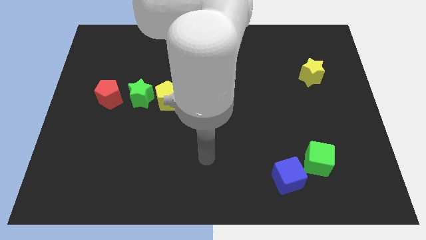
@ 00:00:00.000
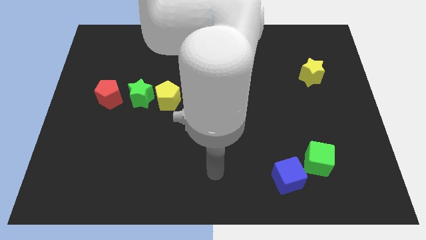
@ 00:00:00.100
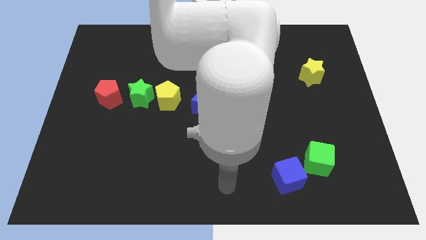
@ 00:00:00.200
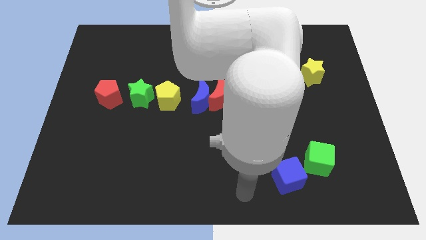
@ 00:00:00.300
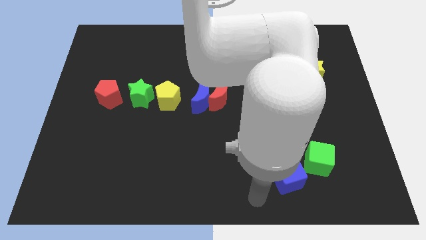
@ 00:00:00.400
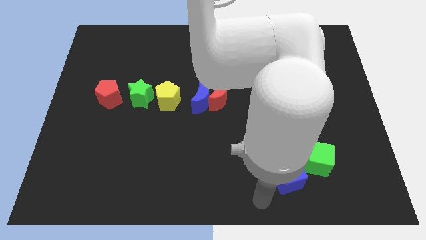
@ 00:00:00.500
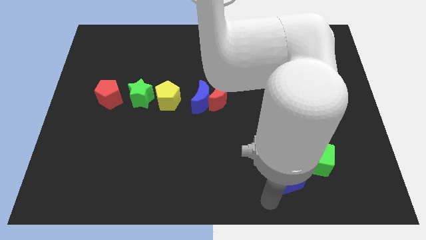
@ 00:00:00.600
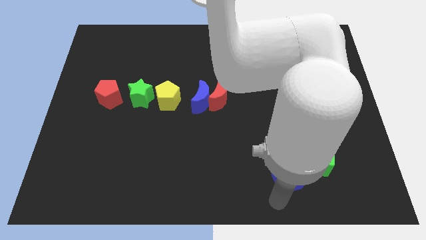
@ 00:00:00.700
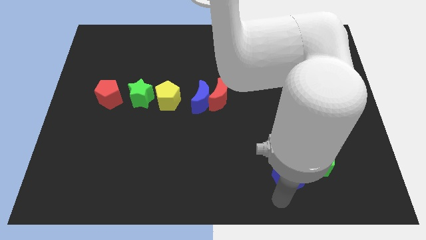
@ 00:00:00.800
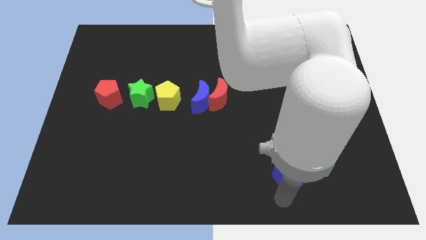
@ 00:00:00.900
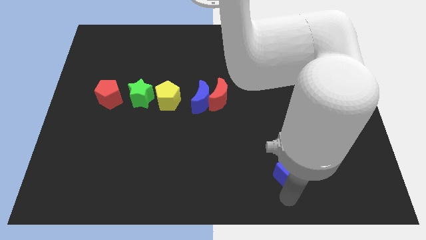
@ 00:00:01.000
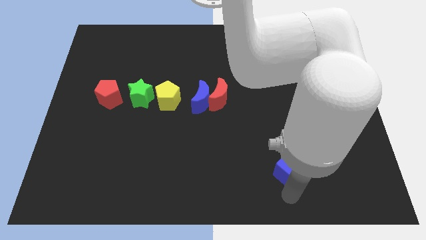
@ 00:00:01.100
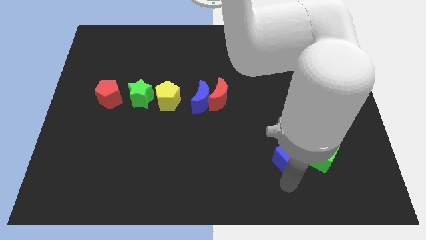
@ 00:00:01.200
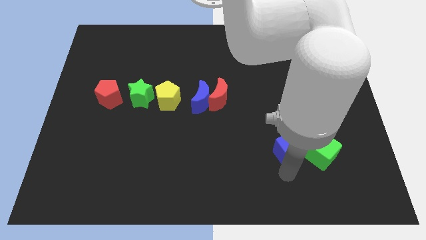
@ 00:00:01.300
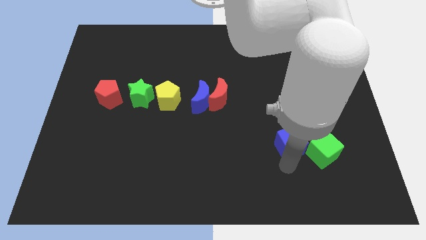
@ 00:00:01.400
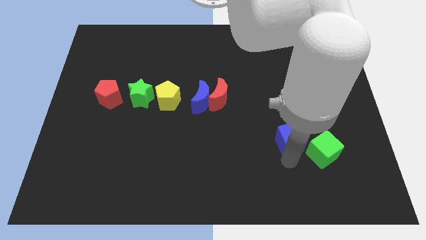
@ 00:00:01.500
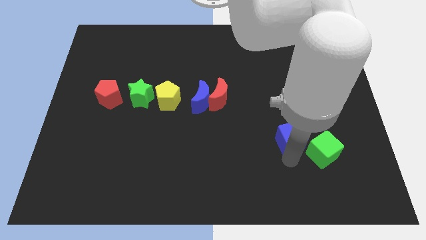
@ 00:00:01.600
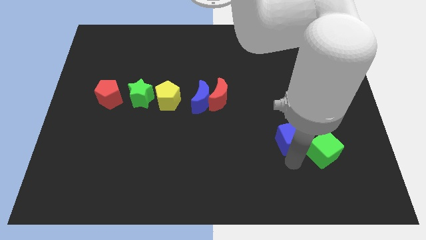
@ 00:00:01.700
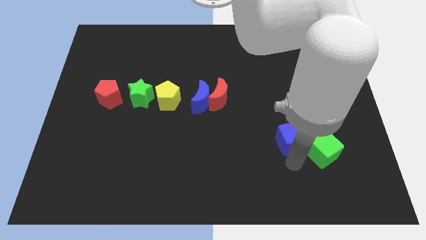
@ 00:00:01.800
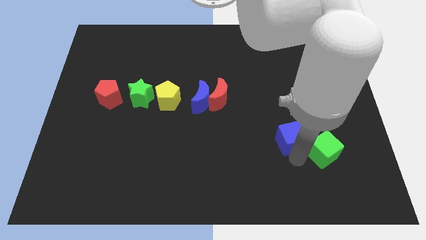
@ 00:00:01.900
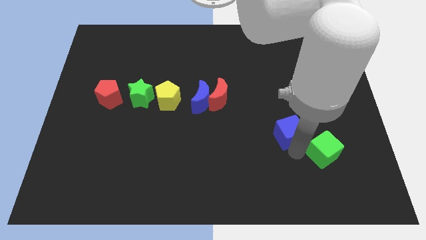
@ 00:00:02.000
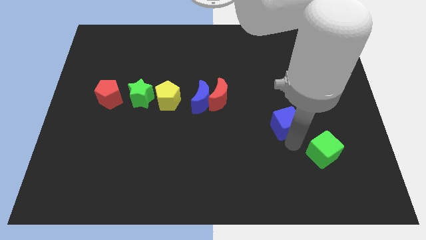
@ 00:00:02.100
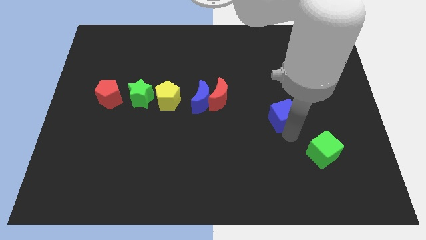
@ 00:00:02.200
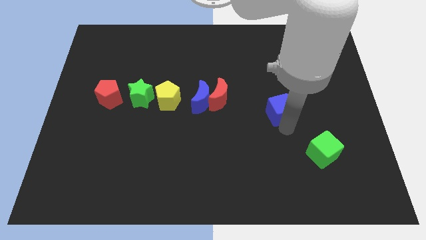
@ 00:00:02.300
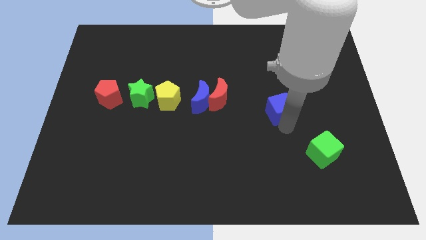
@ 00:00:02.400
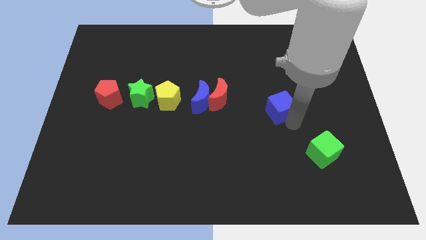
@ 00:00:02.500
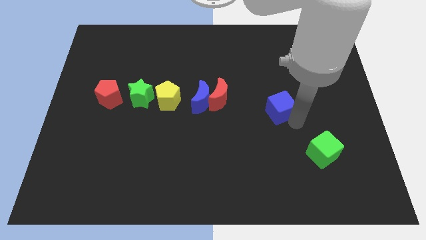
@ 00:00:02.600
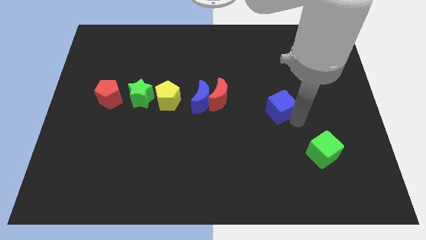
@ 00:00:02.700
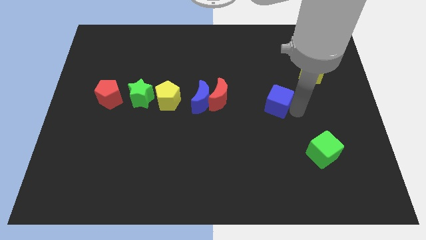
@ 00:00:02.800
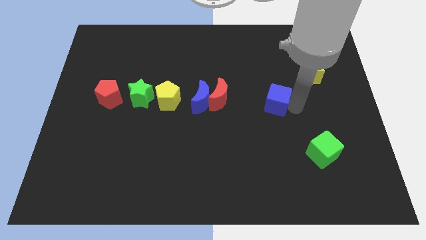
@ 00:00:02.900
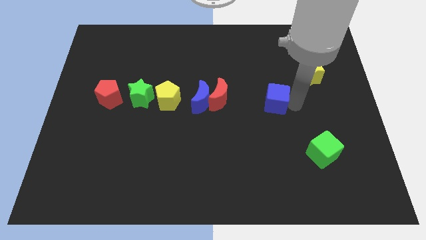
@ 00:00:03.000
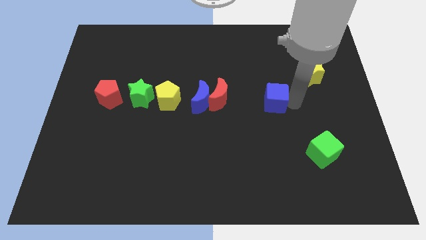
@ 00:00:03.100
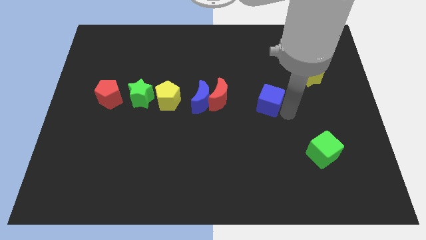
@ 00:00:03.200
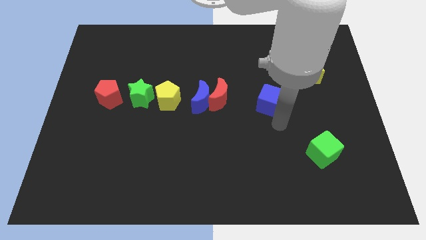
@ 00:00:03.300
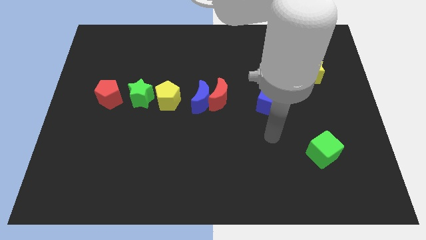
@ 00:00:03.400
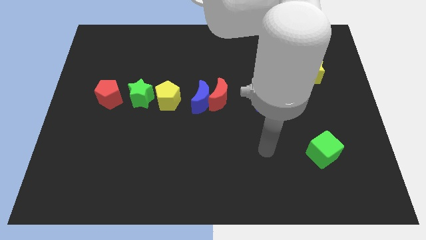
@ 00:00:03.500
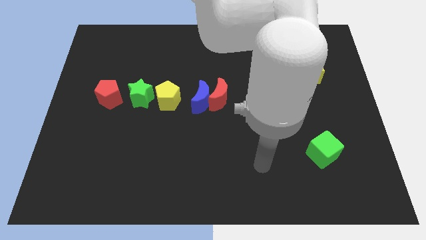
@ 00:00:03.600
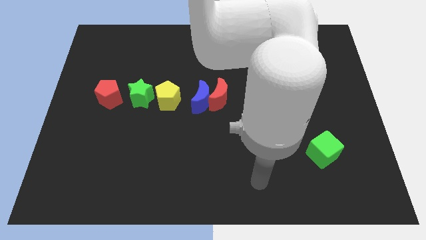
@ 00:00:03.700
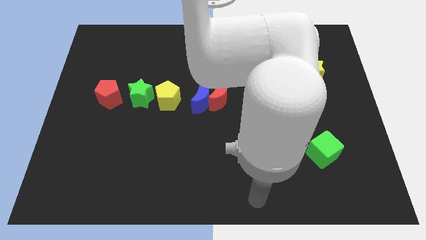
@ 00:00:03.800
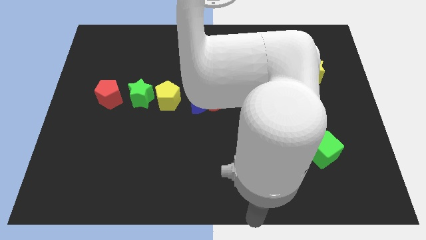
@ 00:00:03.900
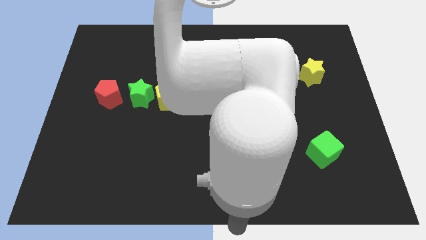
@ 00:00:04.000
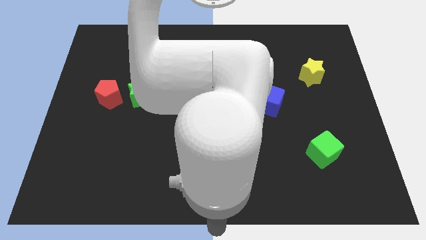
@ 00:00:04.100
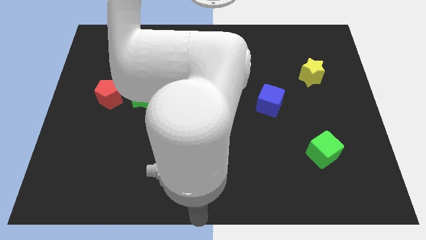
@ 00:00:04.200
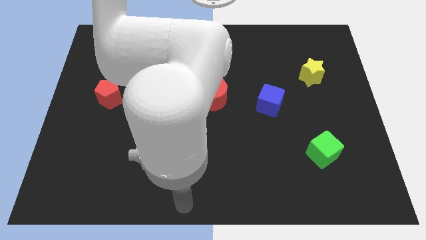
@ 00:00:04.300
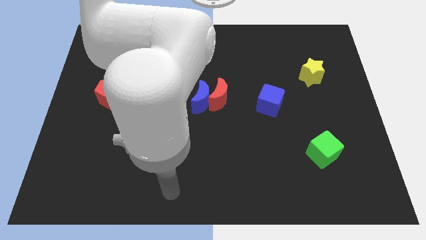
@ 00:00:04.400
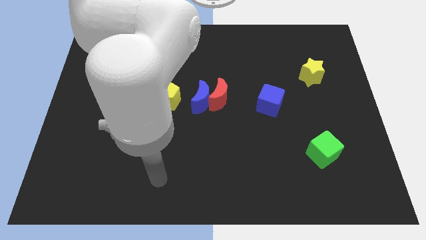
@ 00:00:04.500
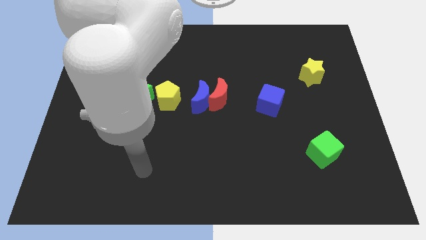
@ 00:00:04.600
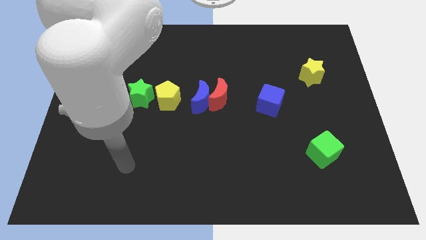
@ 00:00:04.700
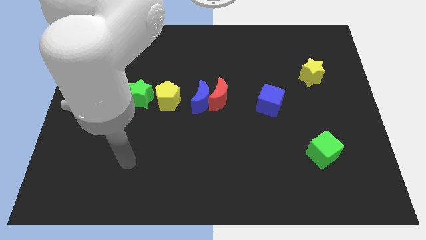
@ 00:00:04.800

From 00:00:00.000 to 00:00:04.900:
move the blue cube to the horizontal line

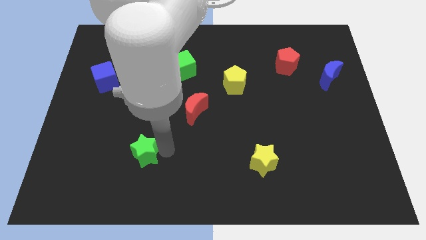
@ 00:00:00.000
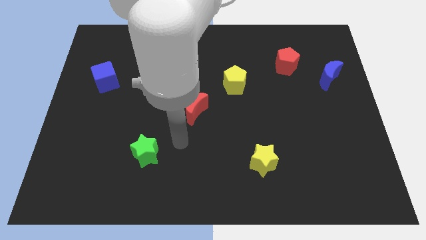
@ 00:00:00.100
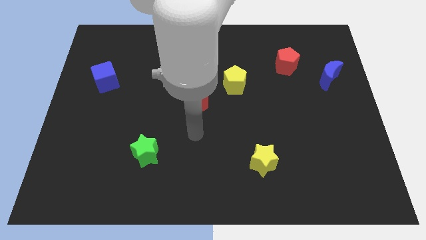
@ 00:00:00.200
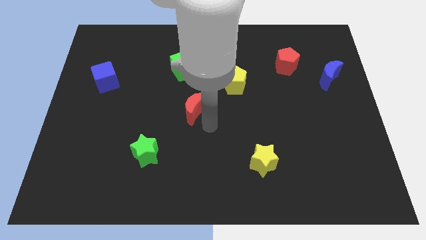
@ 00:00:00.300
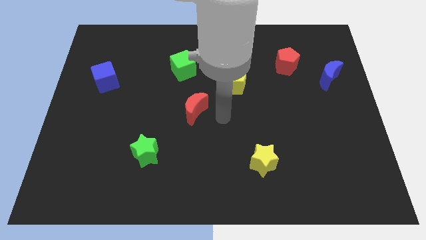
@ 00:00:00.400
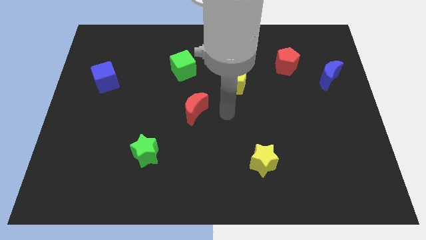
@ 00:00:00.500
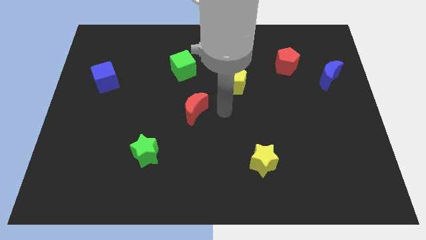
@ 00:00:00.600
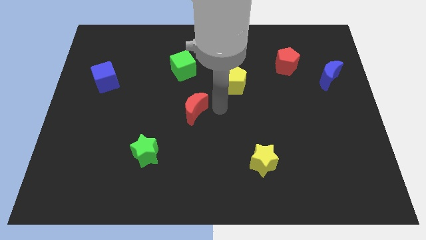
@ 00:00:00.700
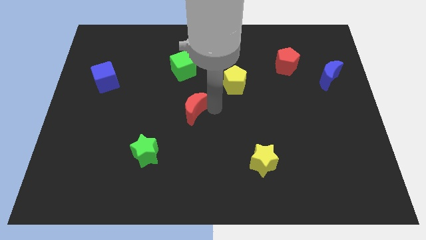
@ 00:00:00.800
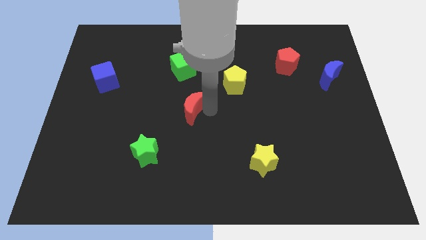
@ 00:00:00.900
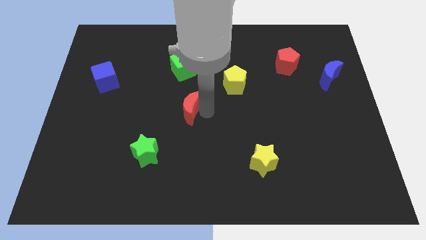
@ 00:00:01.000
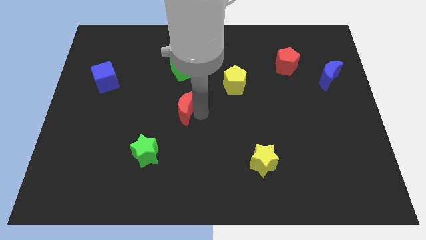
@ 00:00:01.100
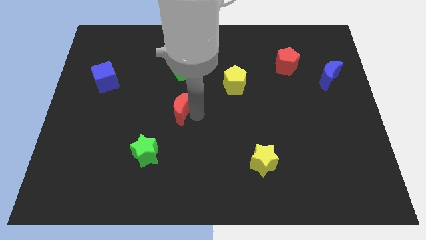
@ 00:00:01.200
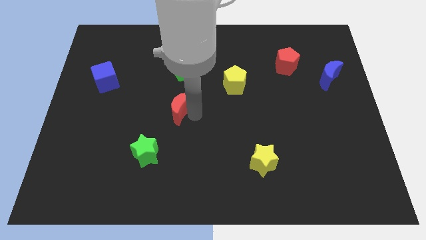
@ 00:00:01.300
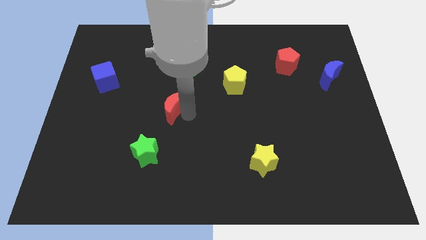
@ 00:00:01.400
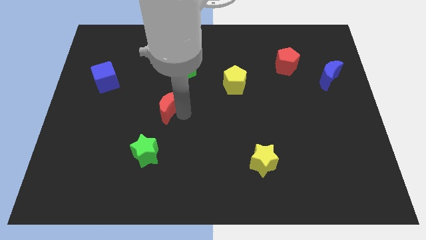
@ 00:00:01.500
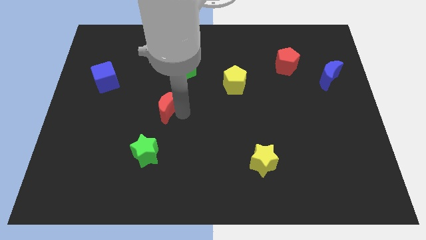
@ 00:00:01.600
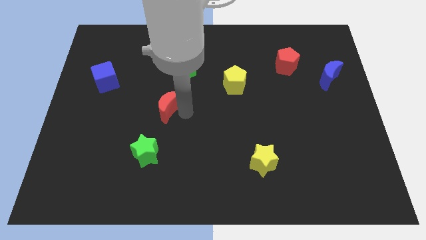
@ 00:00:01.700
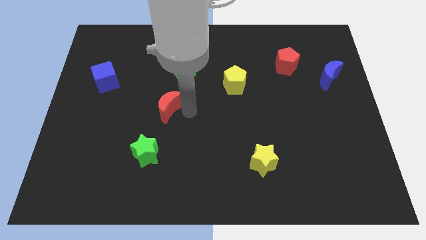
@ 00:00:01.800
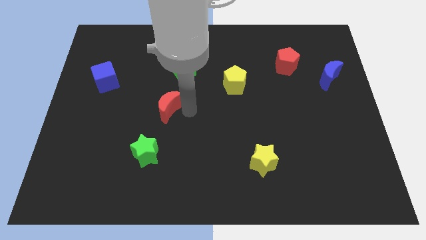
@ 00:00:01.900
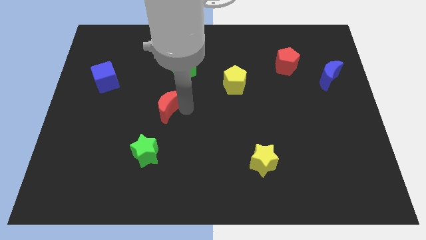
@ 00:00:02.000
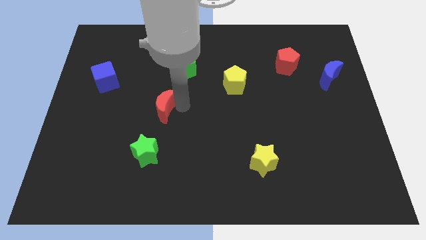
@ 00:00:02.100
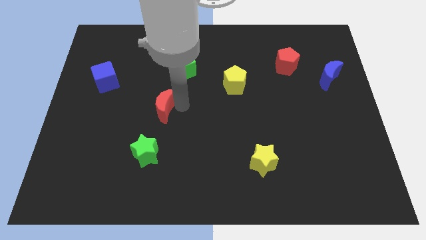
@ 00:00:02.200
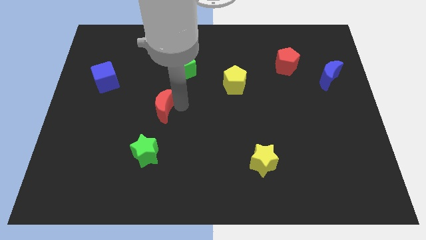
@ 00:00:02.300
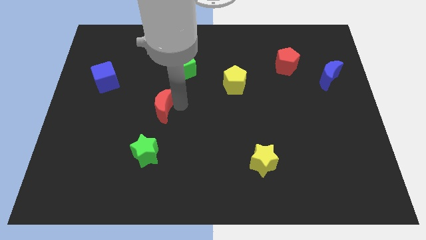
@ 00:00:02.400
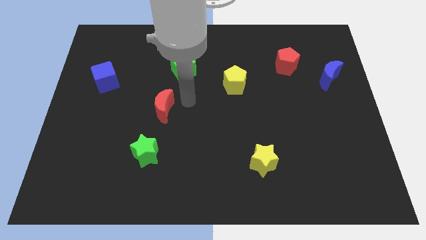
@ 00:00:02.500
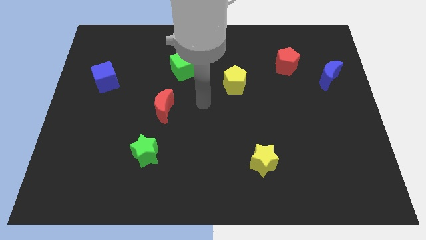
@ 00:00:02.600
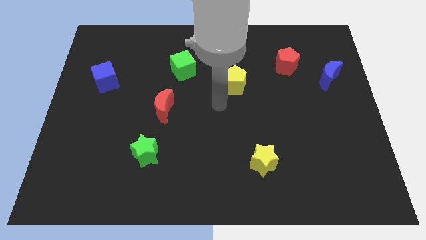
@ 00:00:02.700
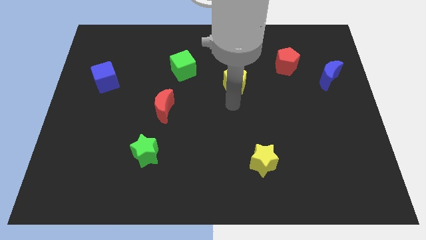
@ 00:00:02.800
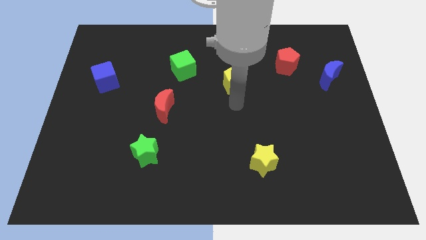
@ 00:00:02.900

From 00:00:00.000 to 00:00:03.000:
place the red crescent in between green star and cube

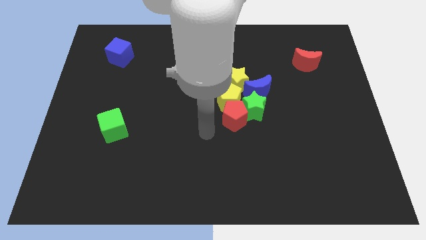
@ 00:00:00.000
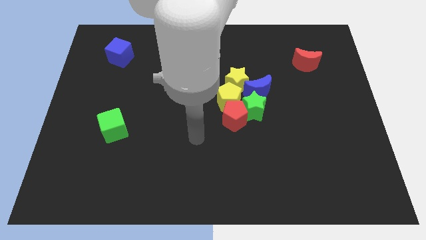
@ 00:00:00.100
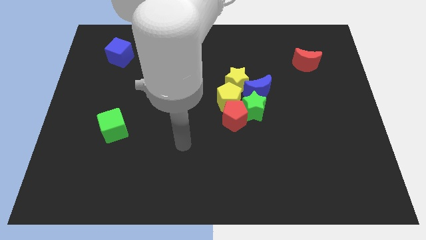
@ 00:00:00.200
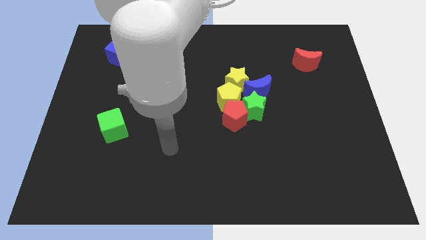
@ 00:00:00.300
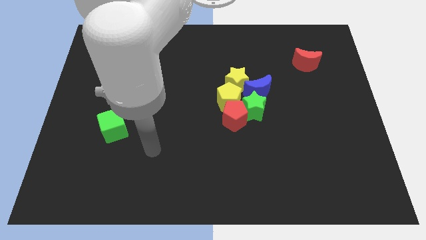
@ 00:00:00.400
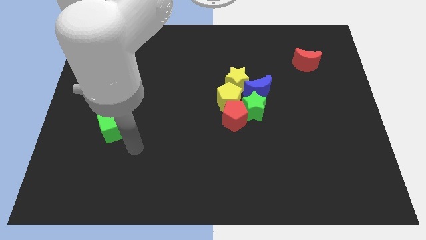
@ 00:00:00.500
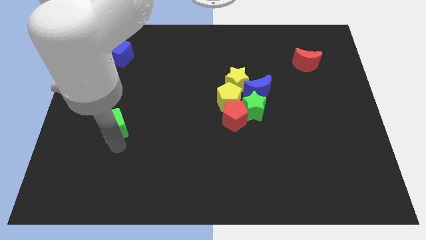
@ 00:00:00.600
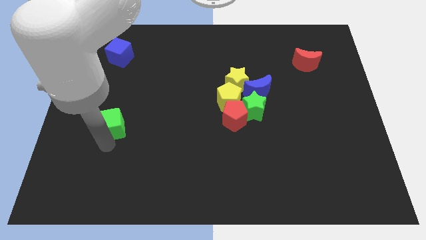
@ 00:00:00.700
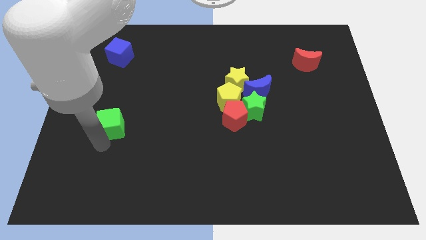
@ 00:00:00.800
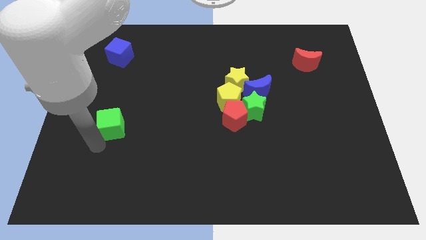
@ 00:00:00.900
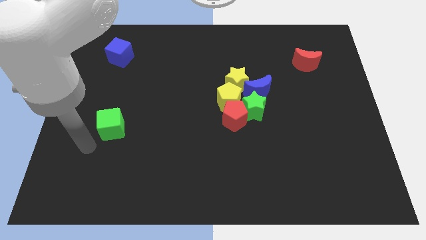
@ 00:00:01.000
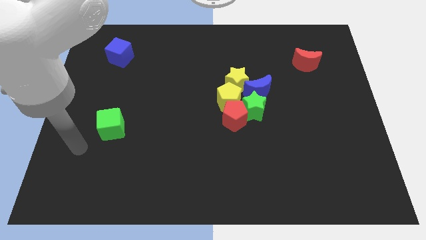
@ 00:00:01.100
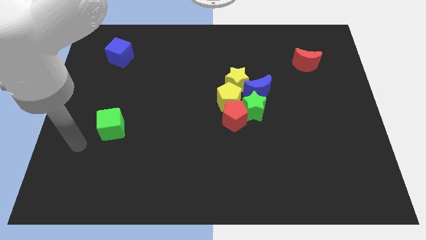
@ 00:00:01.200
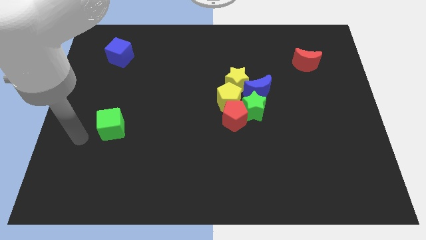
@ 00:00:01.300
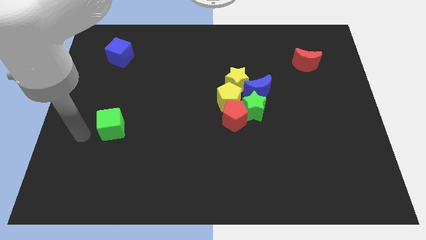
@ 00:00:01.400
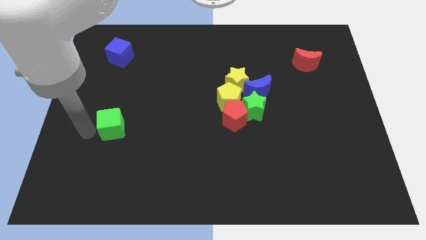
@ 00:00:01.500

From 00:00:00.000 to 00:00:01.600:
move your arm towards the green cube
